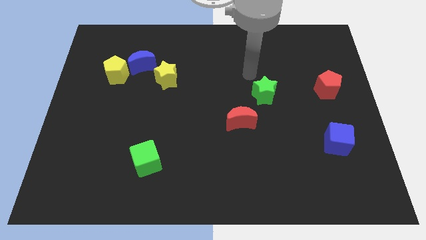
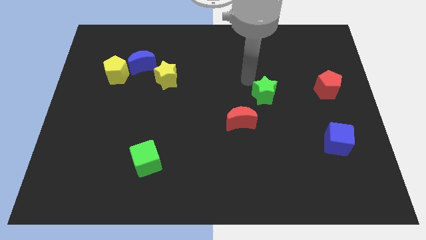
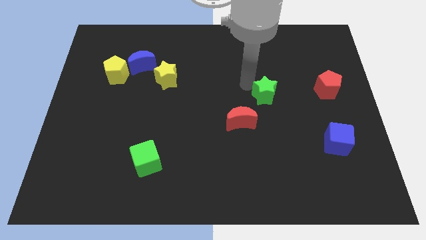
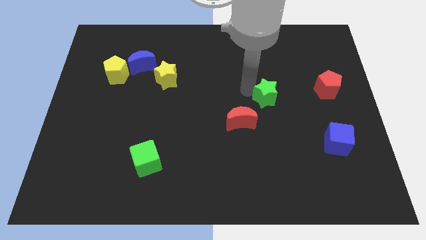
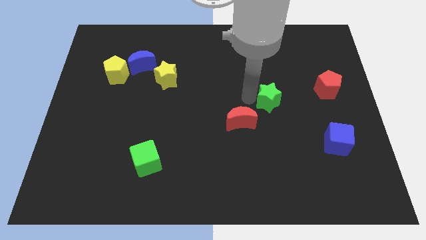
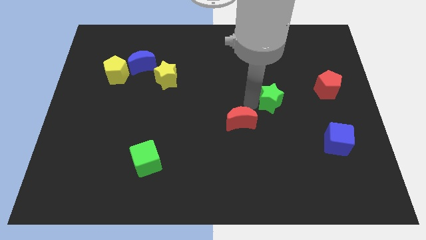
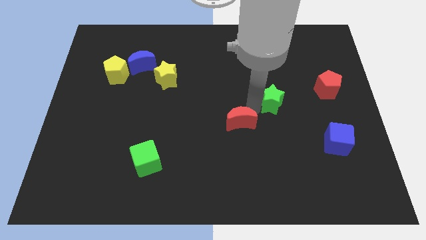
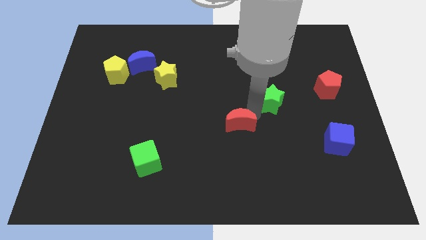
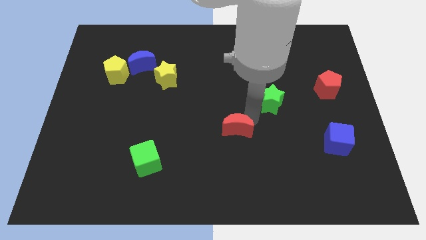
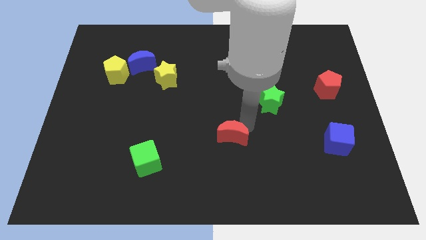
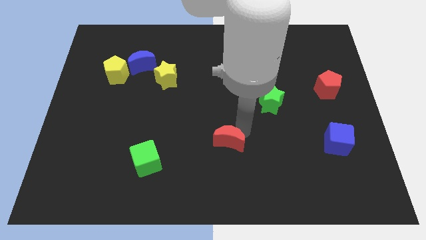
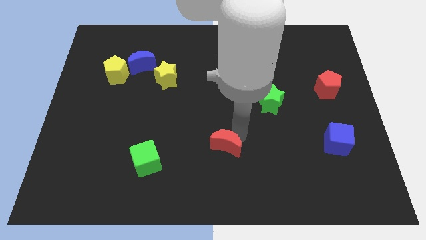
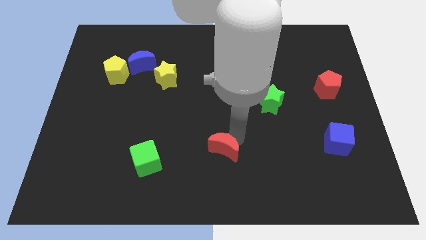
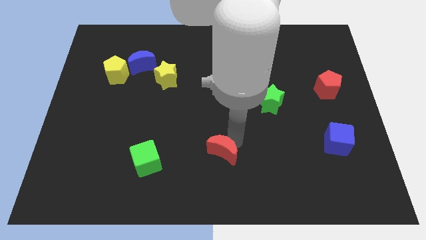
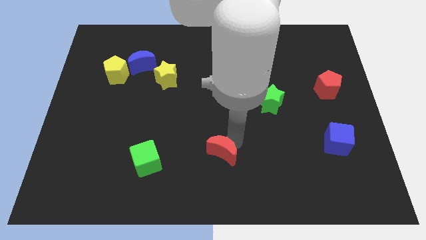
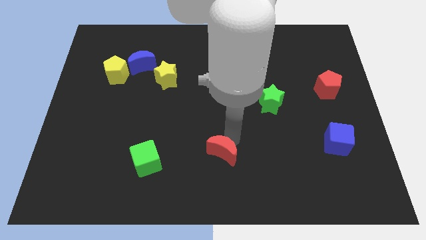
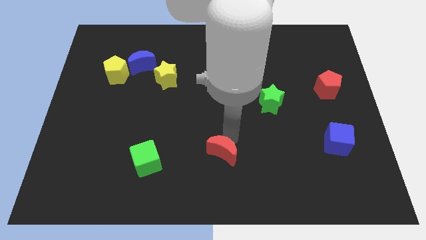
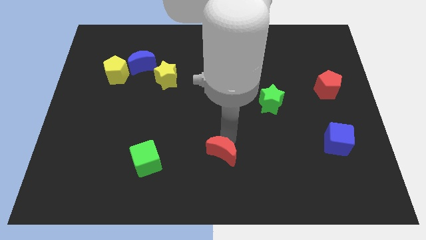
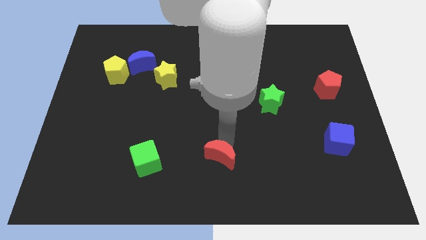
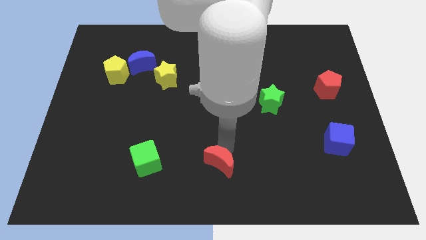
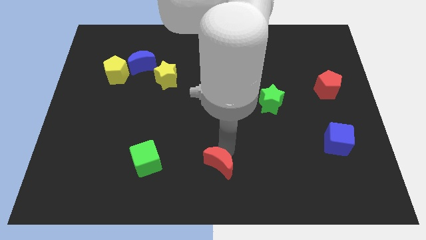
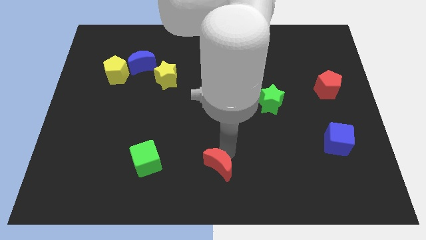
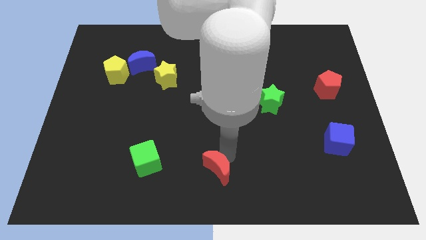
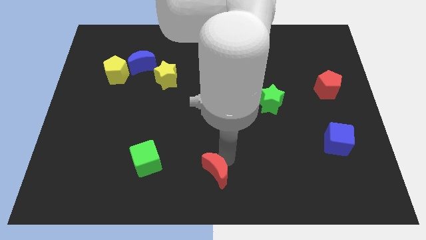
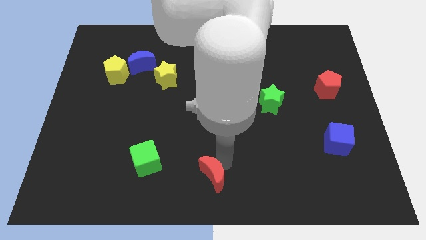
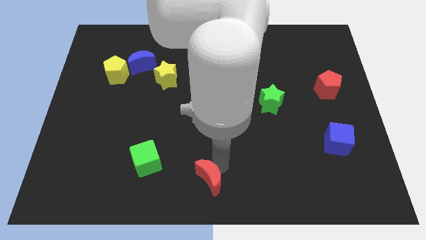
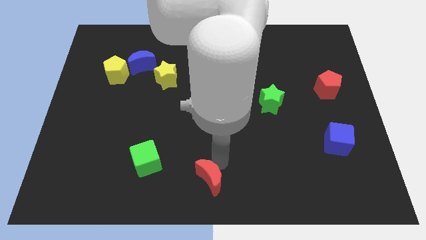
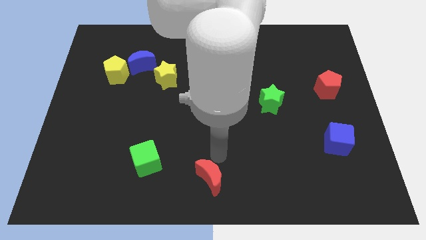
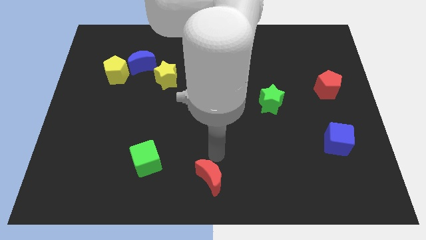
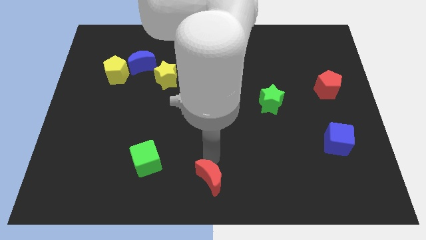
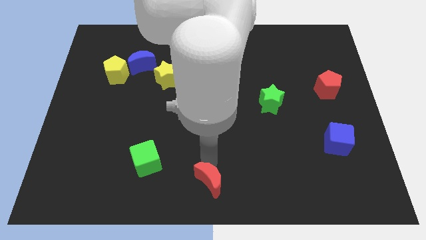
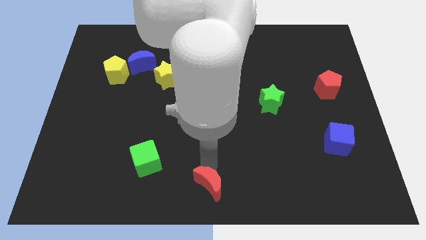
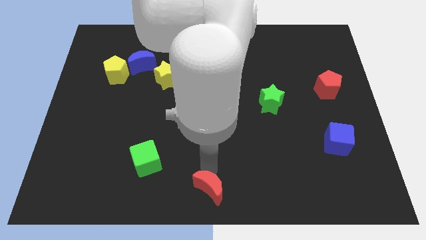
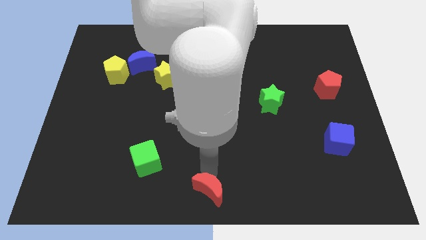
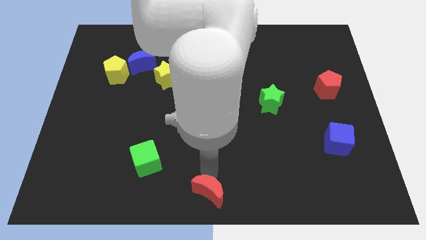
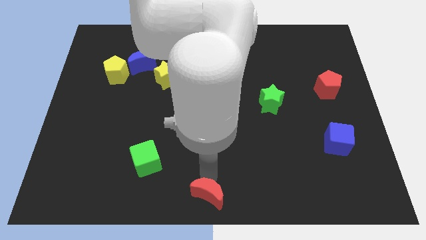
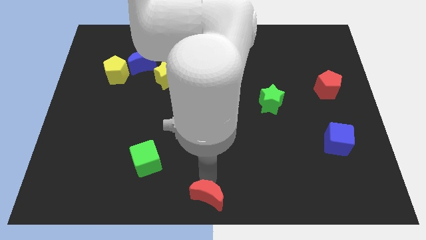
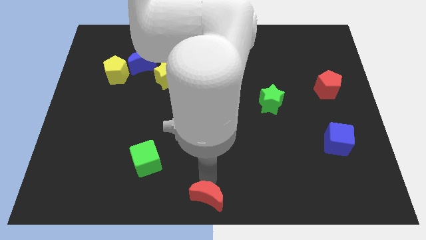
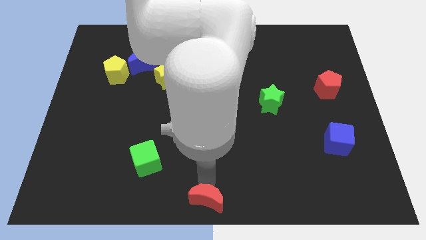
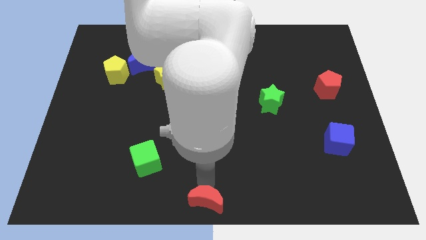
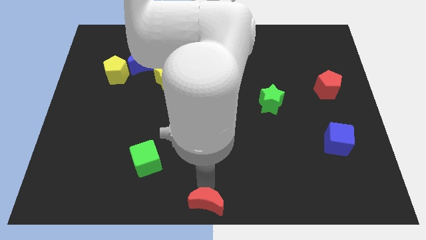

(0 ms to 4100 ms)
push the red crescent towards the bottom center of the board

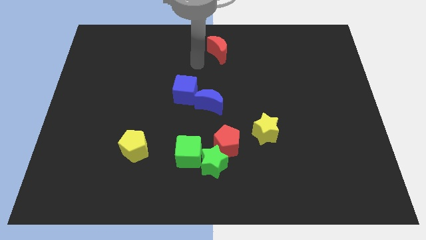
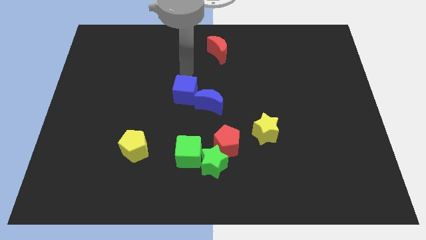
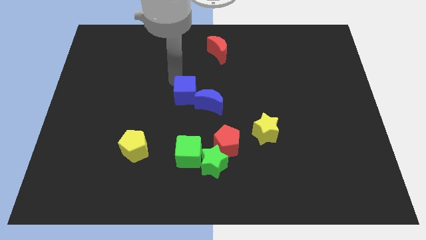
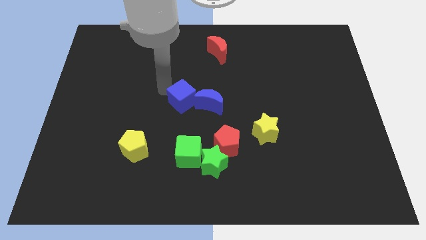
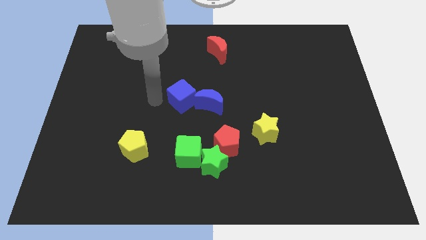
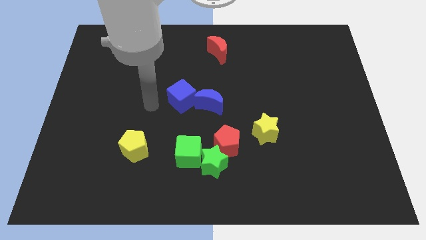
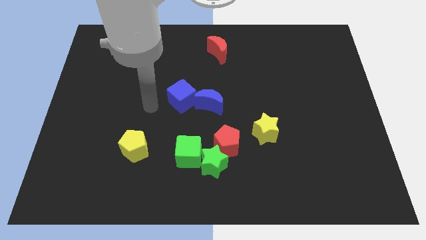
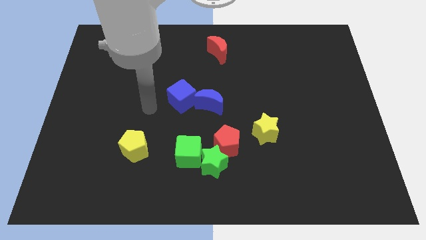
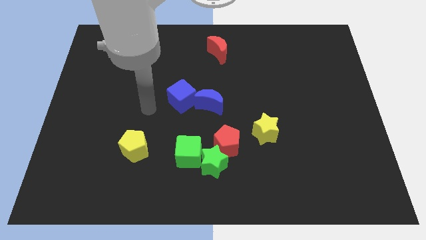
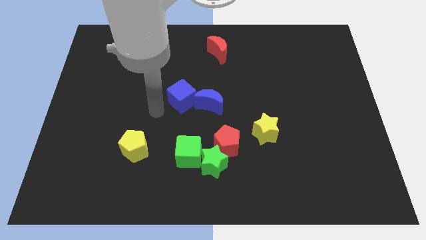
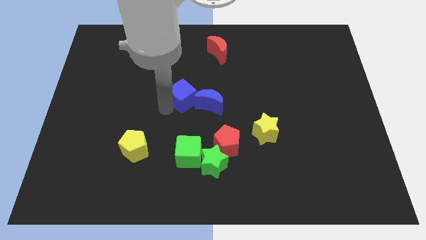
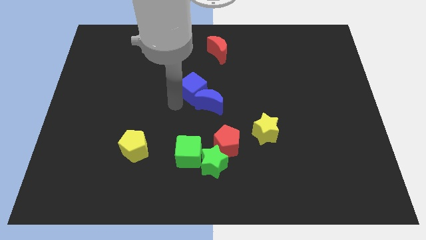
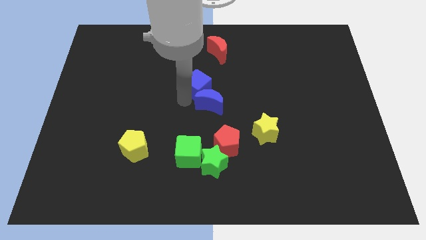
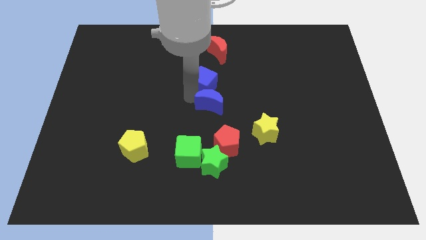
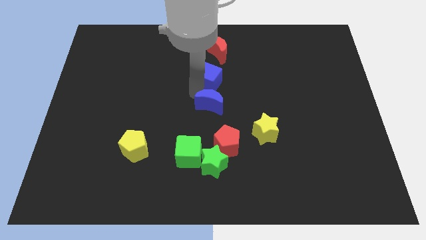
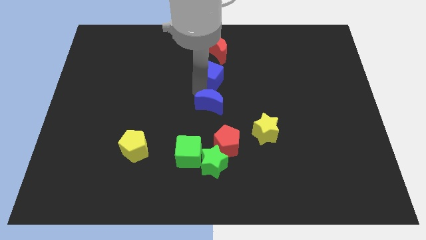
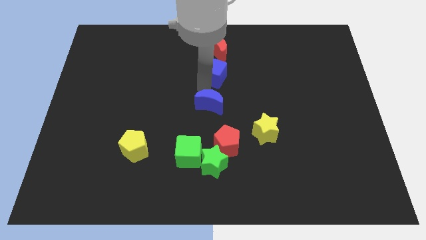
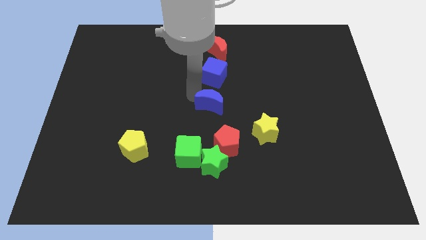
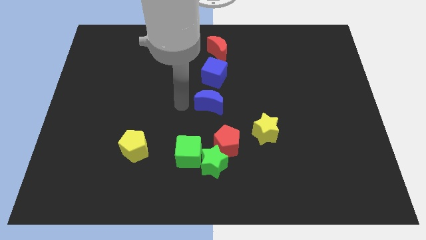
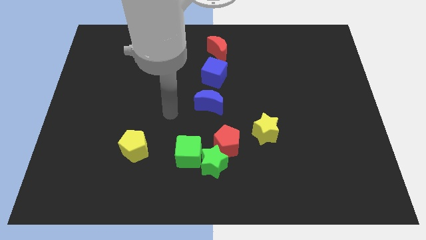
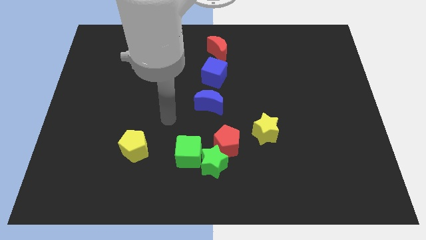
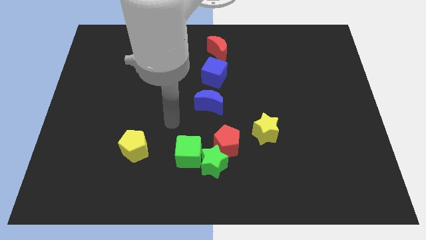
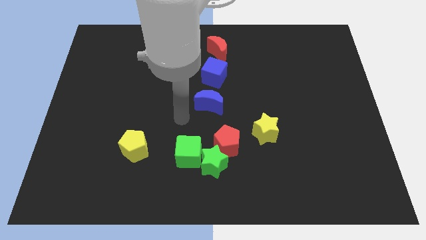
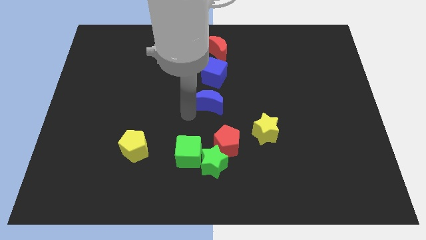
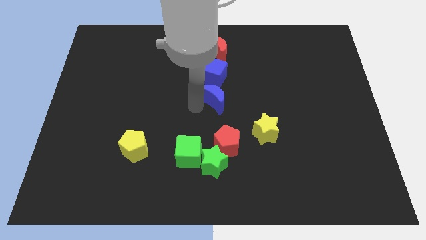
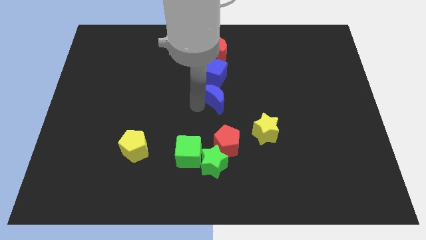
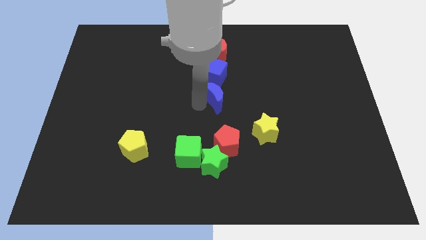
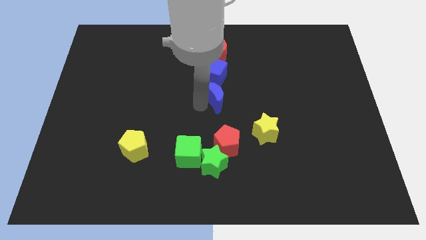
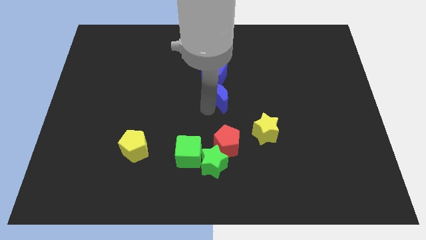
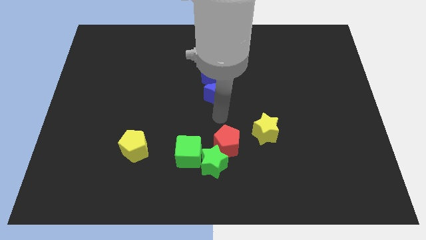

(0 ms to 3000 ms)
push the blue blocks to the bottom of the red crescent to form a line

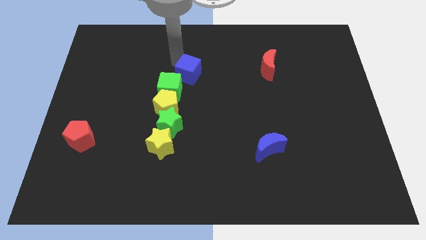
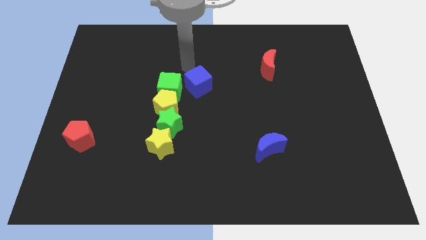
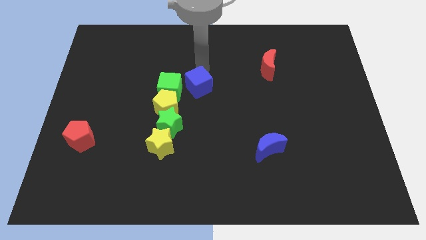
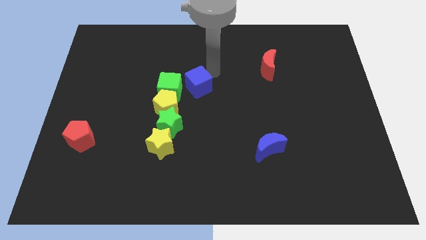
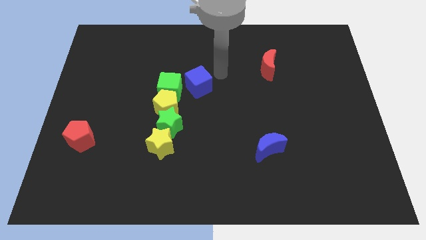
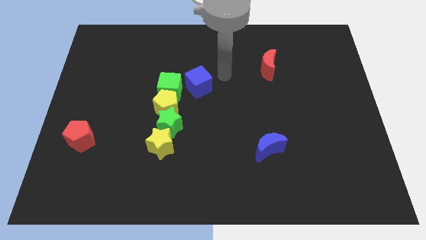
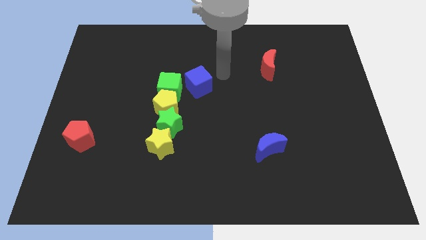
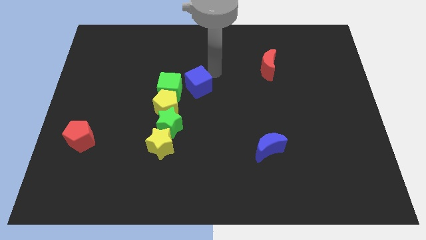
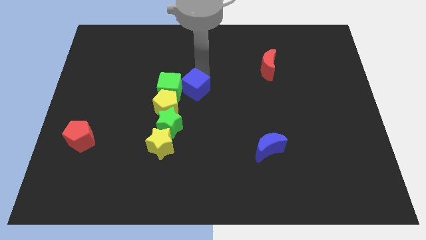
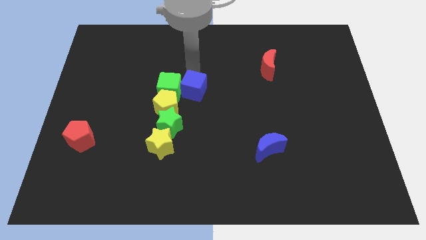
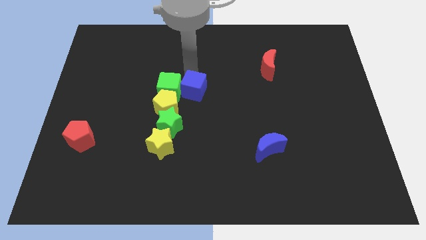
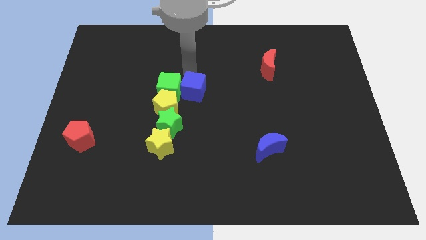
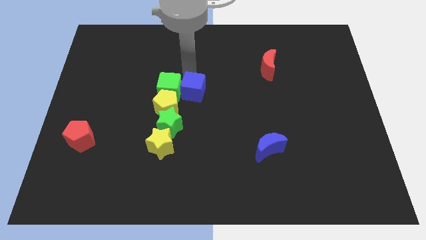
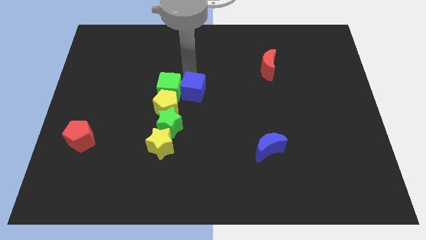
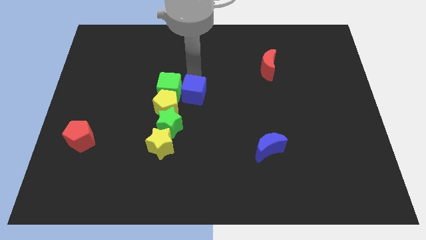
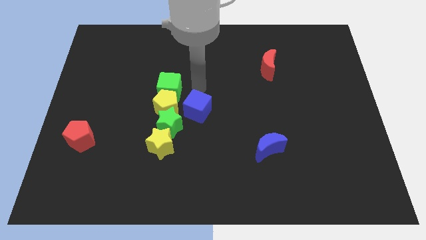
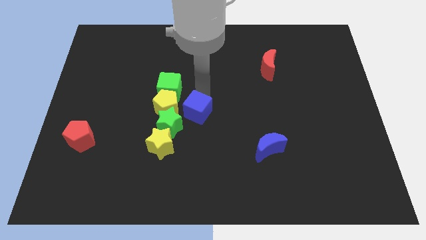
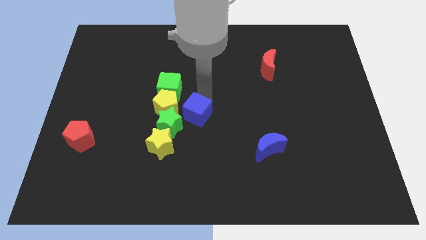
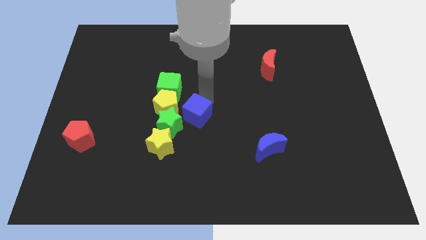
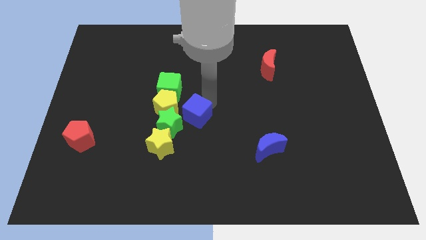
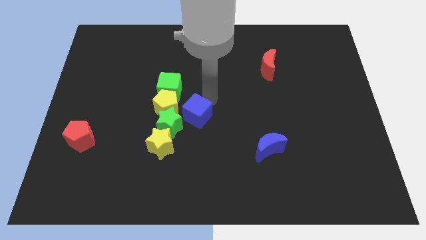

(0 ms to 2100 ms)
move blue cube right to the yellow pentagon
